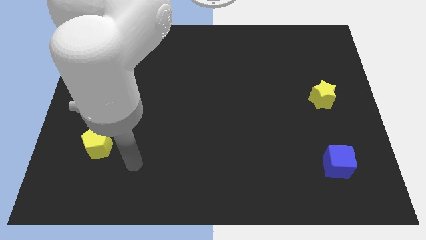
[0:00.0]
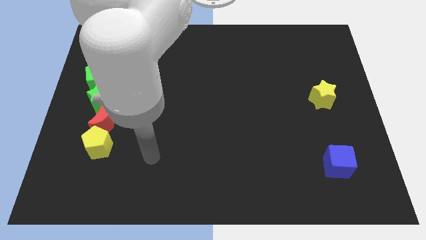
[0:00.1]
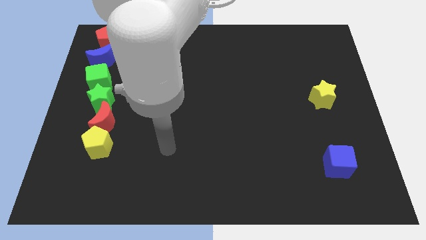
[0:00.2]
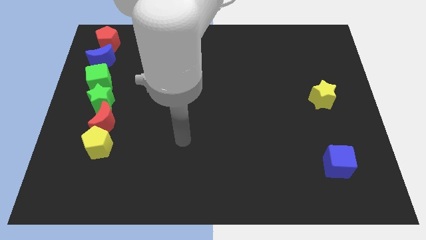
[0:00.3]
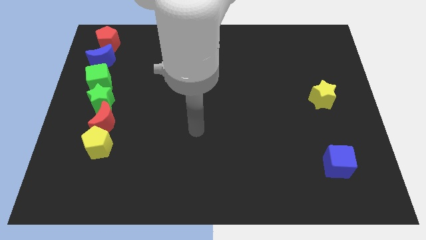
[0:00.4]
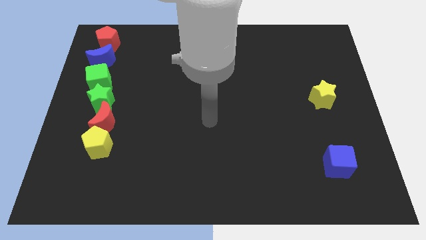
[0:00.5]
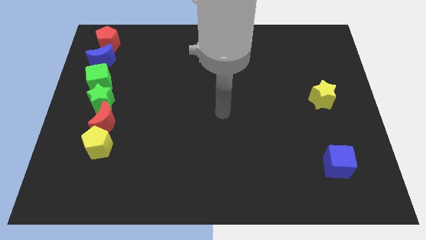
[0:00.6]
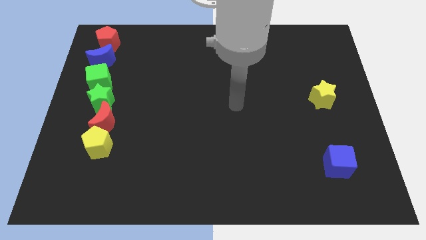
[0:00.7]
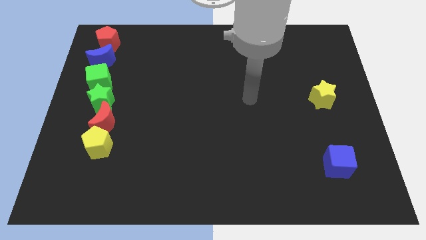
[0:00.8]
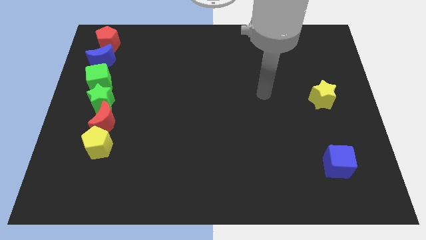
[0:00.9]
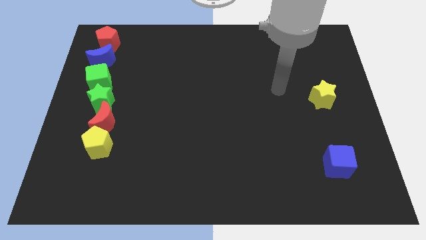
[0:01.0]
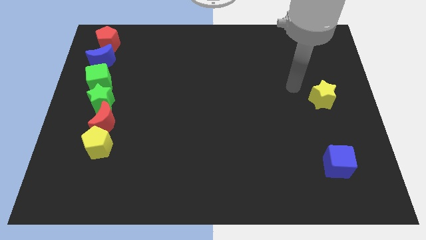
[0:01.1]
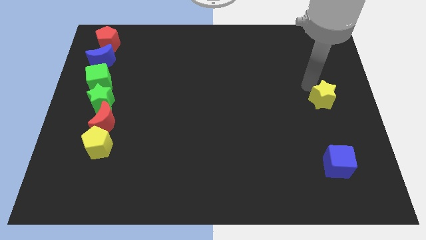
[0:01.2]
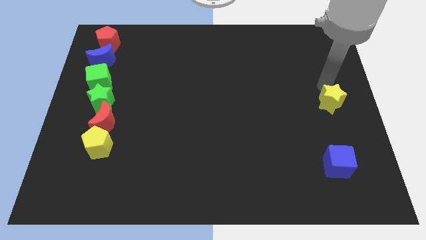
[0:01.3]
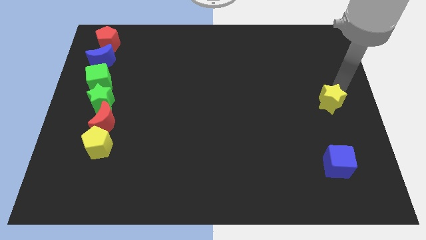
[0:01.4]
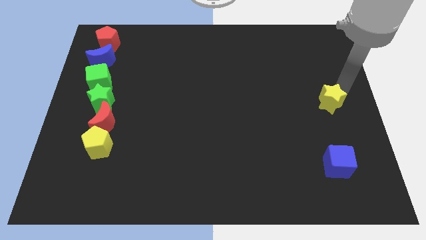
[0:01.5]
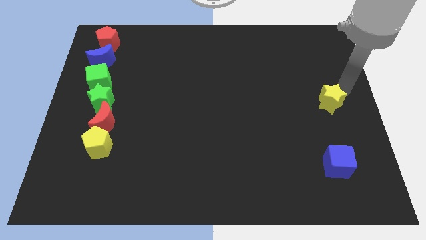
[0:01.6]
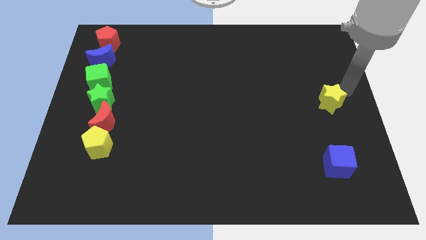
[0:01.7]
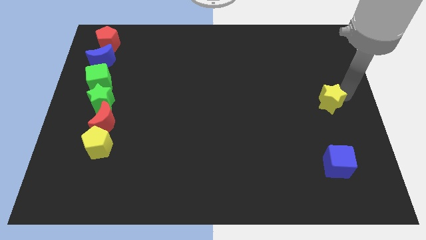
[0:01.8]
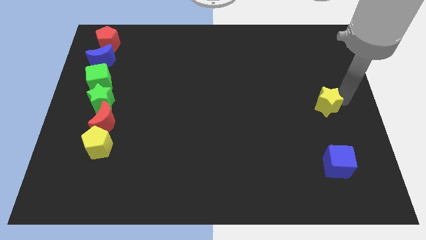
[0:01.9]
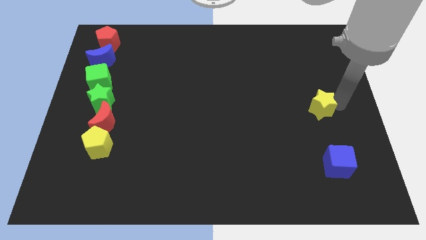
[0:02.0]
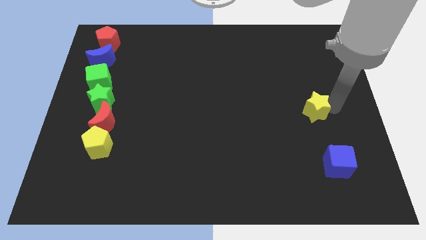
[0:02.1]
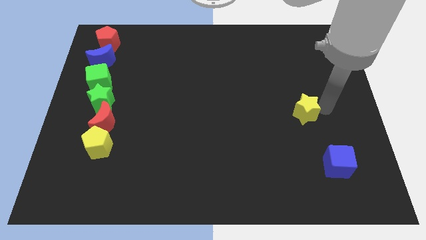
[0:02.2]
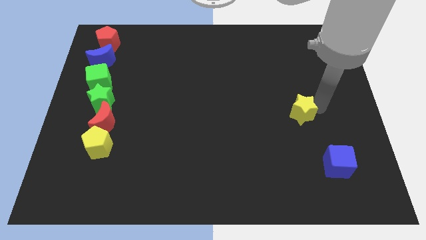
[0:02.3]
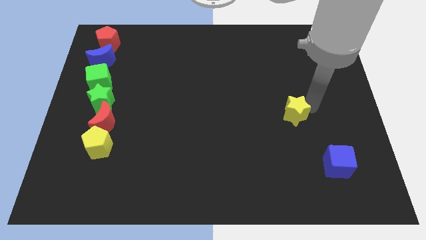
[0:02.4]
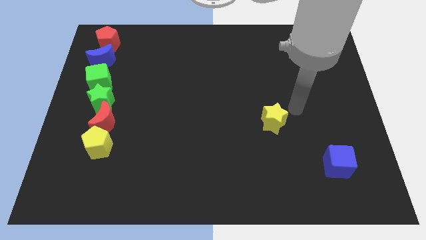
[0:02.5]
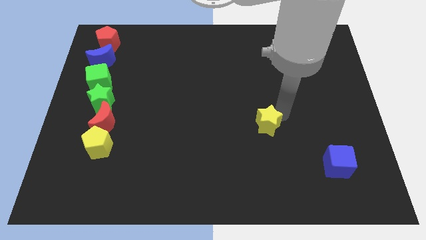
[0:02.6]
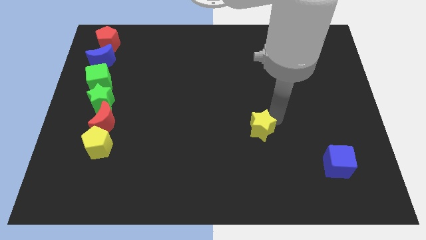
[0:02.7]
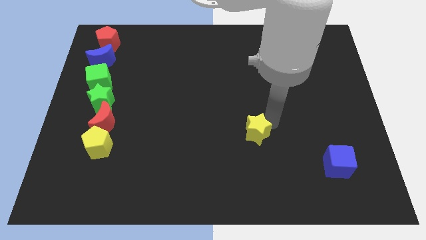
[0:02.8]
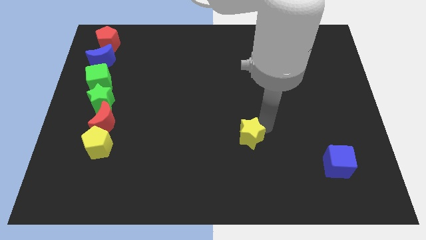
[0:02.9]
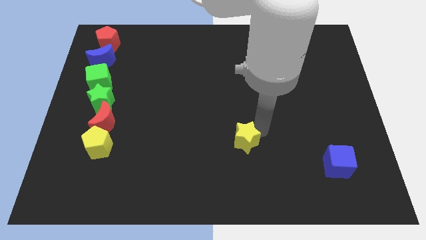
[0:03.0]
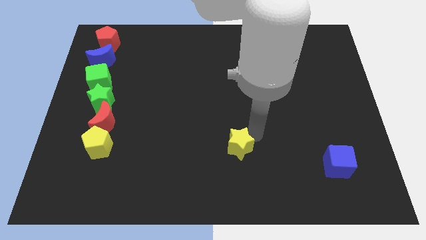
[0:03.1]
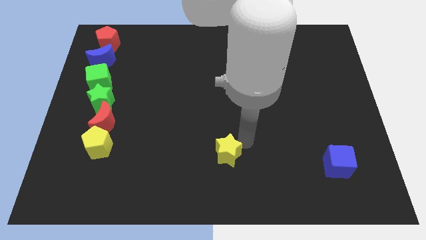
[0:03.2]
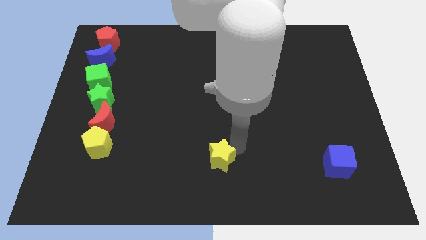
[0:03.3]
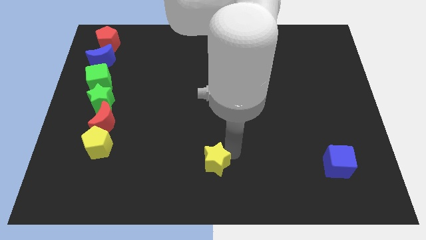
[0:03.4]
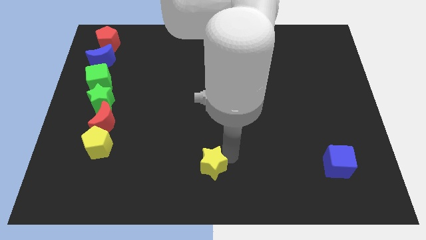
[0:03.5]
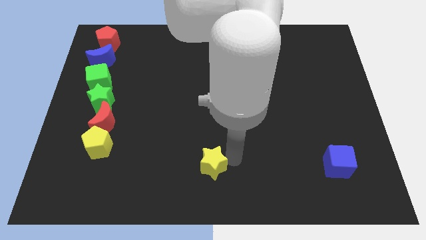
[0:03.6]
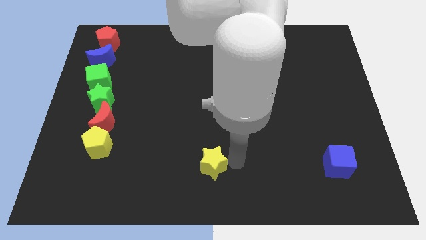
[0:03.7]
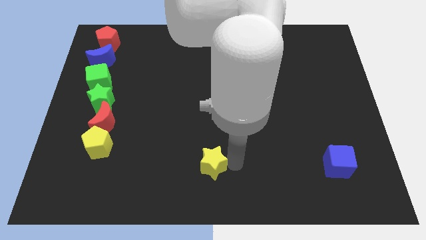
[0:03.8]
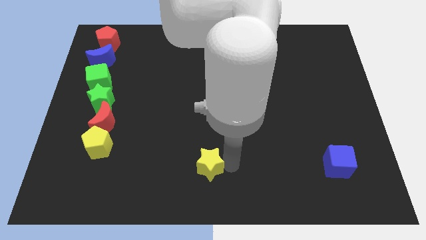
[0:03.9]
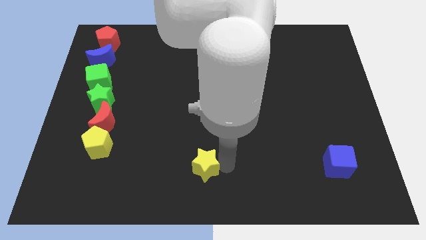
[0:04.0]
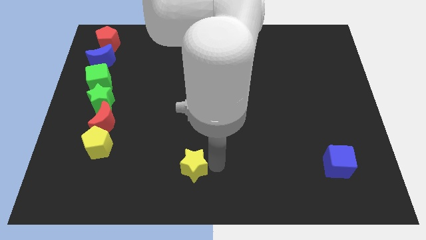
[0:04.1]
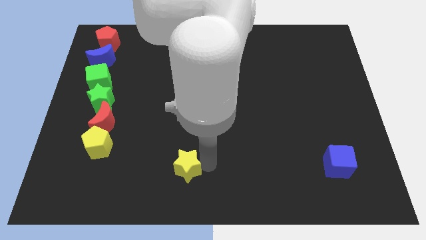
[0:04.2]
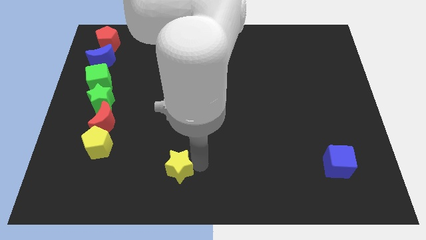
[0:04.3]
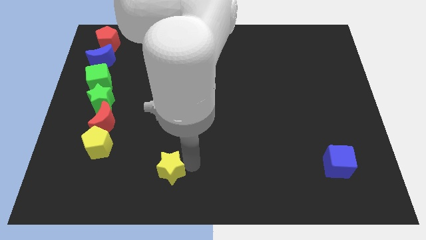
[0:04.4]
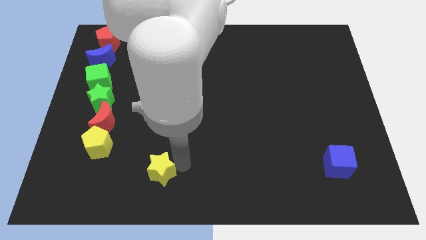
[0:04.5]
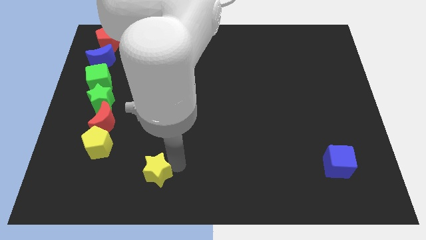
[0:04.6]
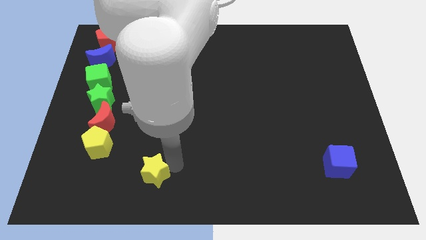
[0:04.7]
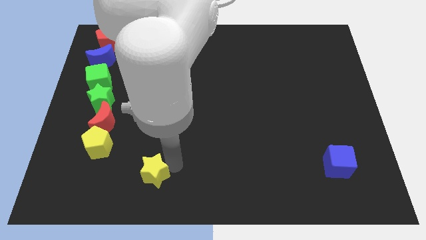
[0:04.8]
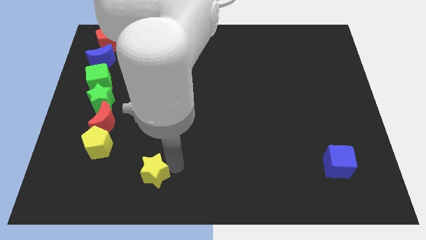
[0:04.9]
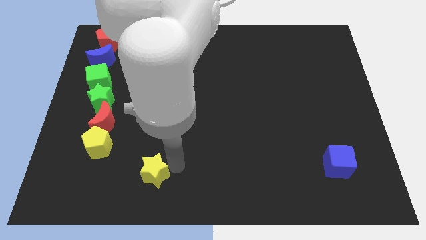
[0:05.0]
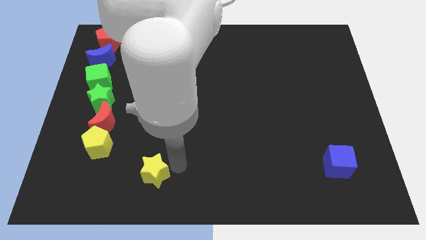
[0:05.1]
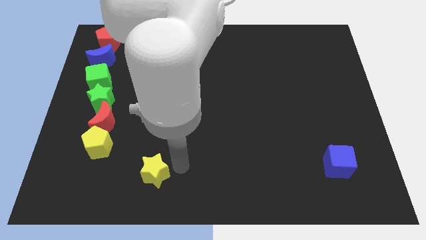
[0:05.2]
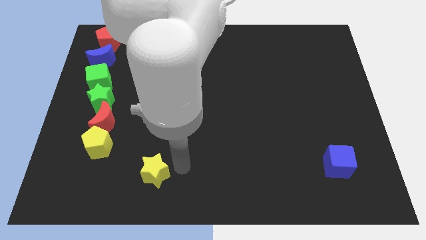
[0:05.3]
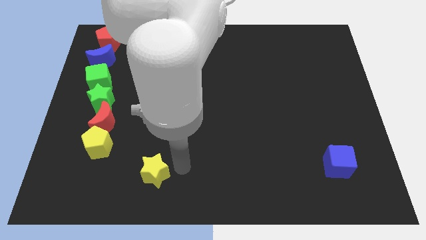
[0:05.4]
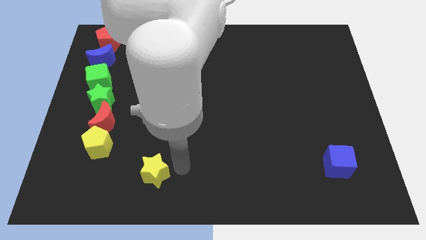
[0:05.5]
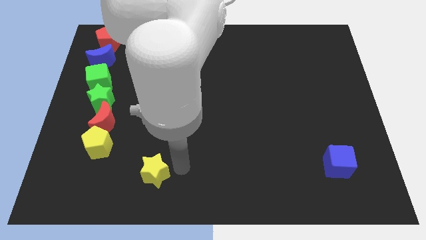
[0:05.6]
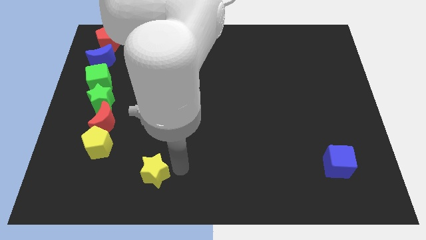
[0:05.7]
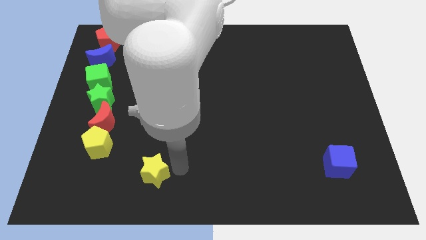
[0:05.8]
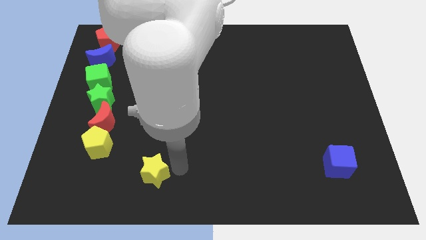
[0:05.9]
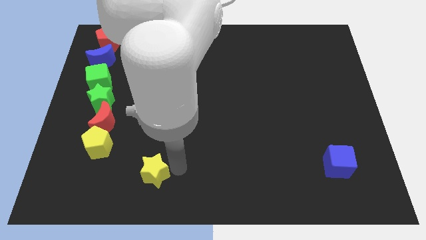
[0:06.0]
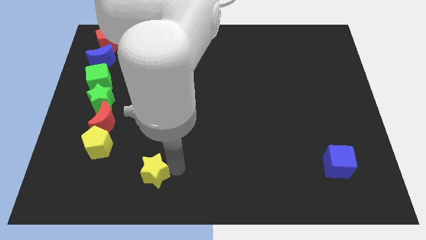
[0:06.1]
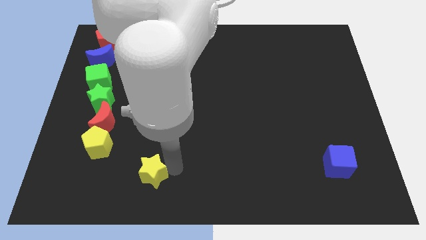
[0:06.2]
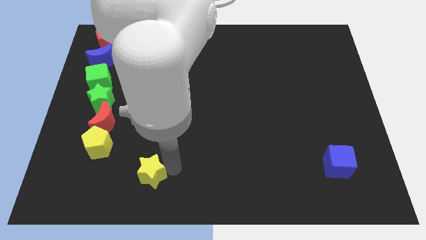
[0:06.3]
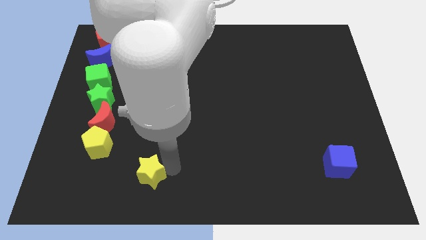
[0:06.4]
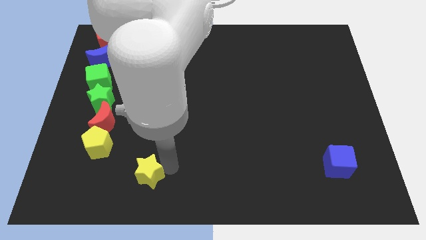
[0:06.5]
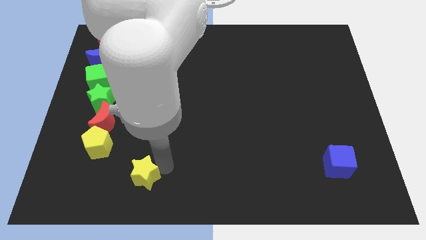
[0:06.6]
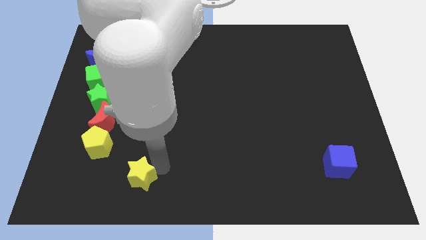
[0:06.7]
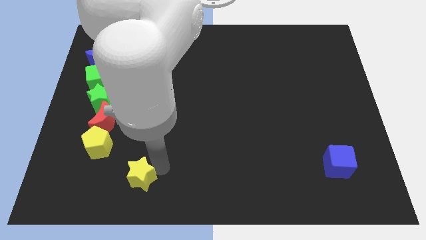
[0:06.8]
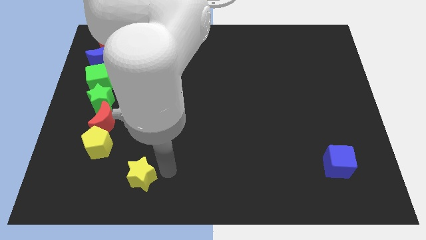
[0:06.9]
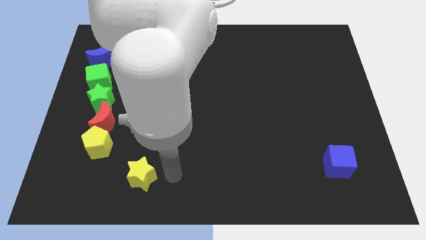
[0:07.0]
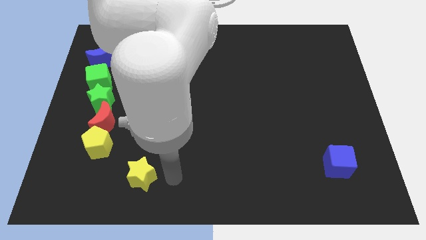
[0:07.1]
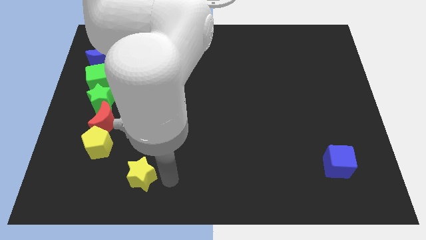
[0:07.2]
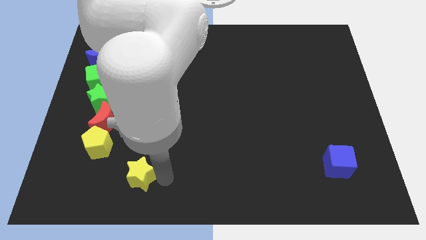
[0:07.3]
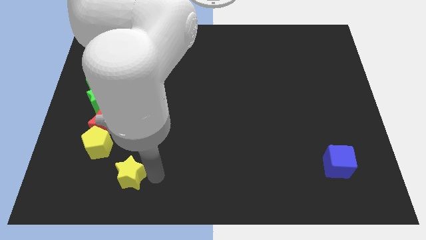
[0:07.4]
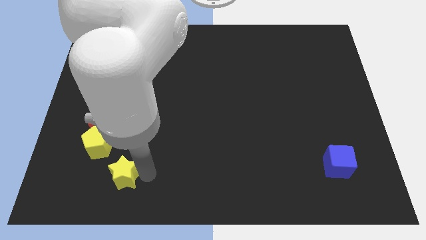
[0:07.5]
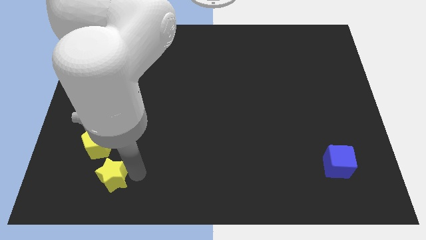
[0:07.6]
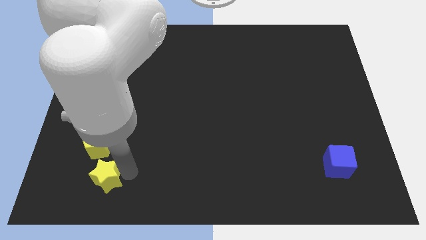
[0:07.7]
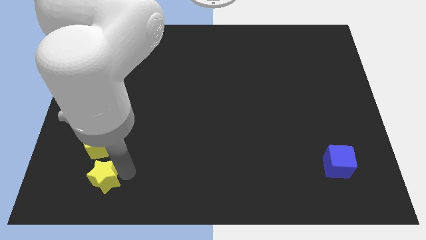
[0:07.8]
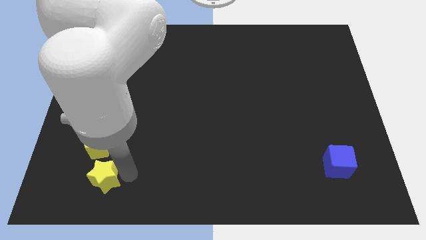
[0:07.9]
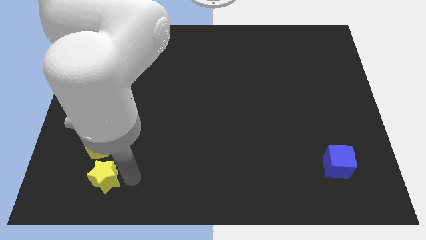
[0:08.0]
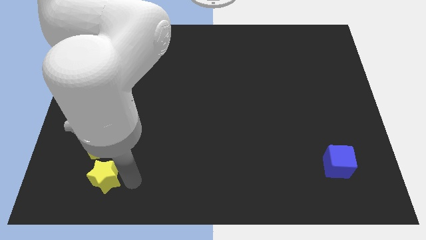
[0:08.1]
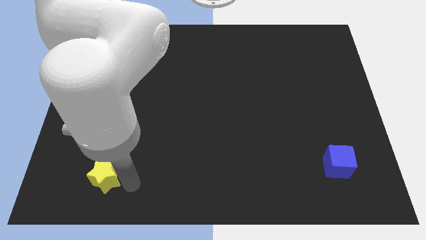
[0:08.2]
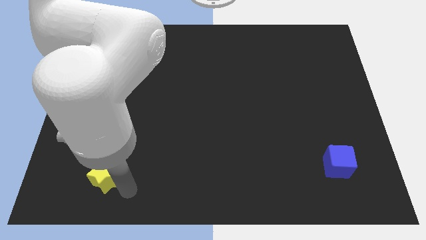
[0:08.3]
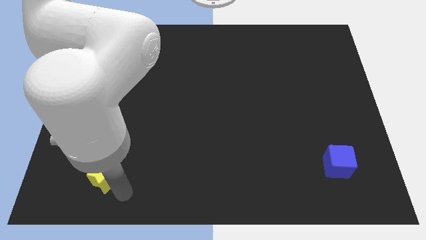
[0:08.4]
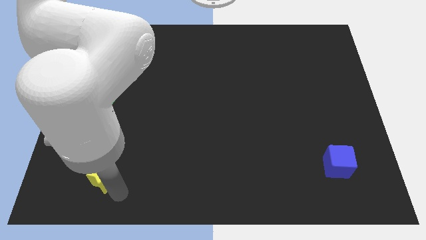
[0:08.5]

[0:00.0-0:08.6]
push yellow star below yellow pentagon

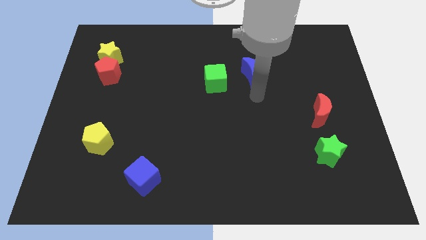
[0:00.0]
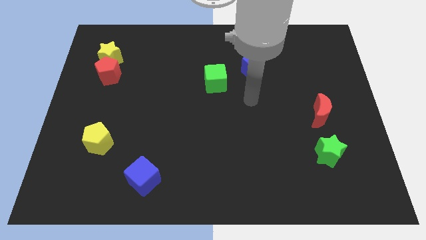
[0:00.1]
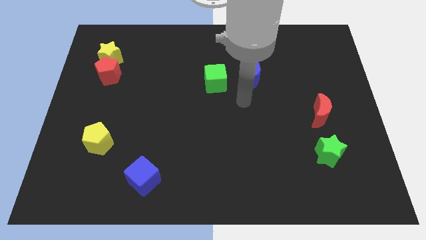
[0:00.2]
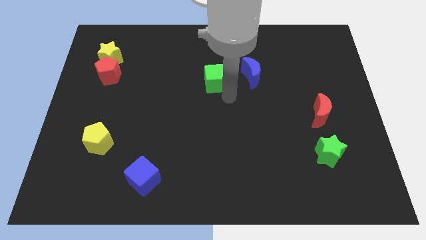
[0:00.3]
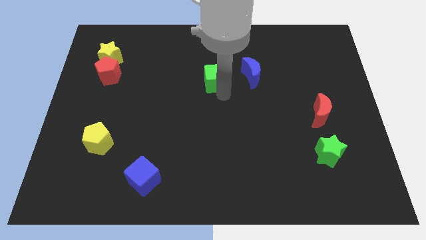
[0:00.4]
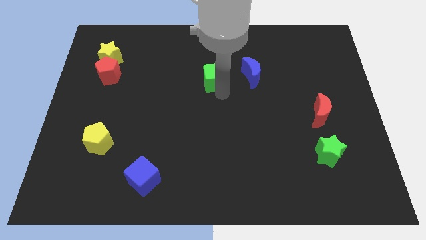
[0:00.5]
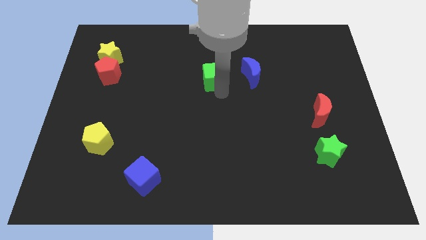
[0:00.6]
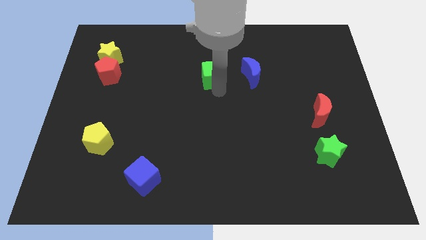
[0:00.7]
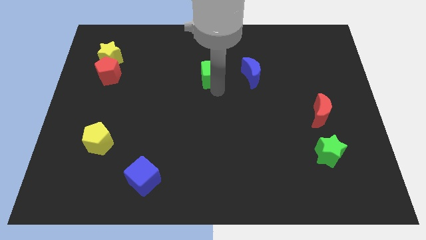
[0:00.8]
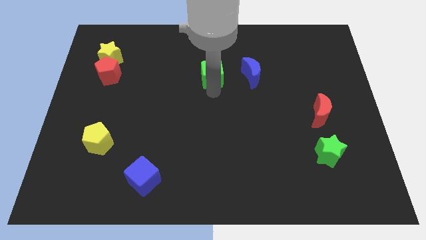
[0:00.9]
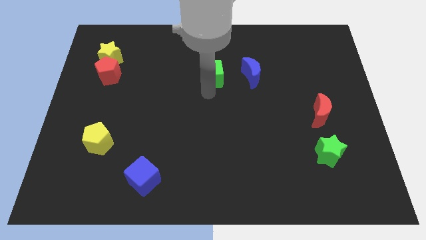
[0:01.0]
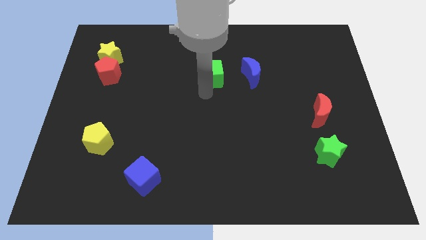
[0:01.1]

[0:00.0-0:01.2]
slightly tap on the green cube
